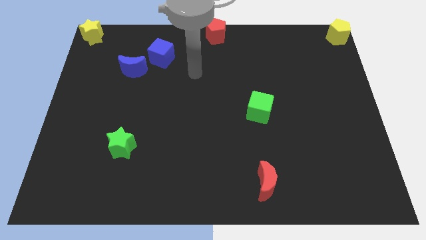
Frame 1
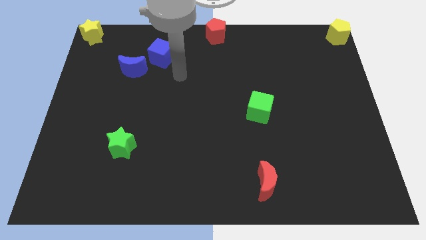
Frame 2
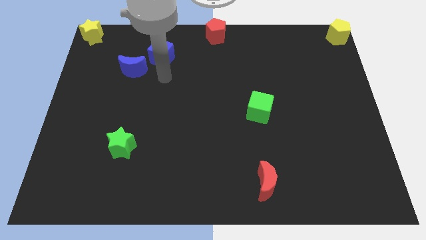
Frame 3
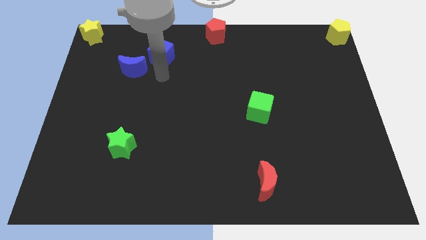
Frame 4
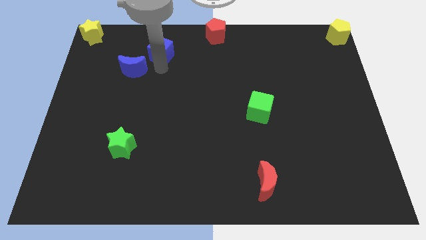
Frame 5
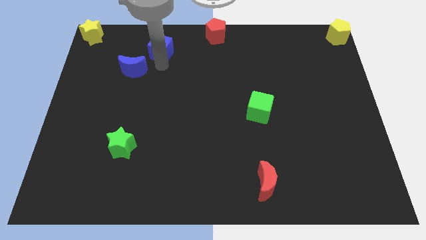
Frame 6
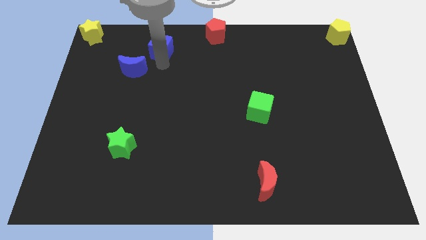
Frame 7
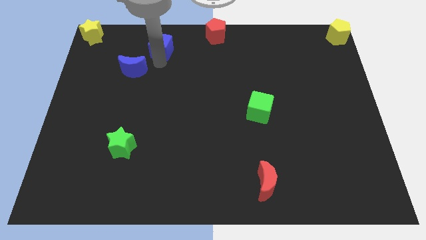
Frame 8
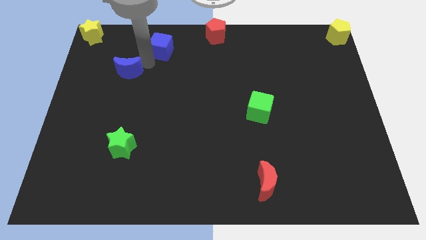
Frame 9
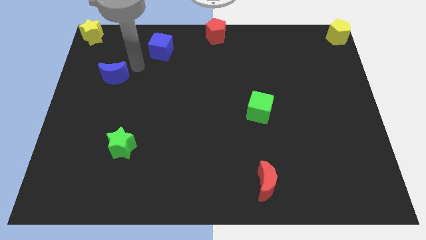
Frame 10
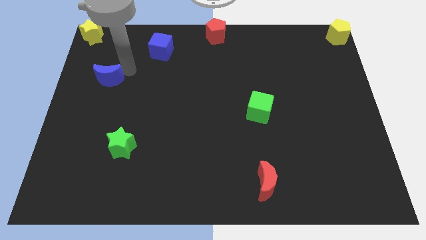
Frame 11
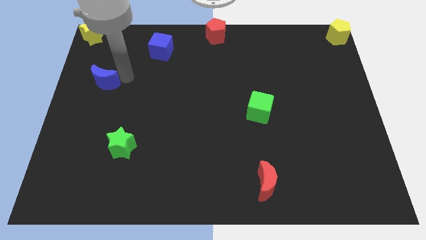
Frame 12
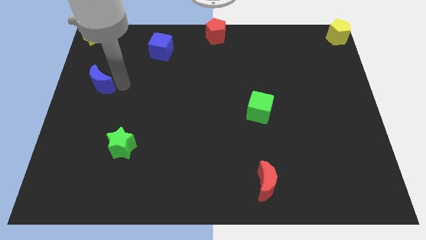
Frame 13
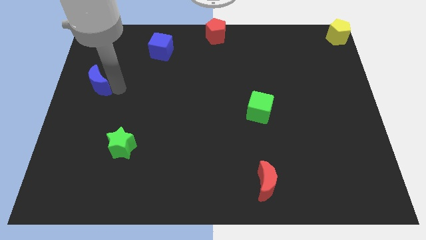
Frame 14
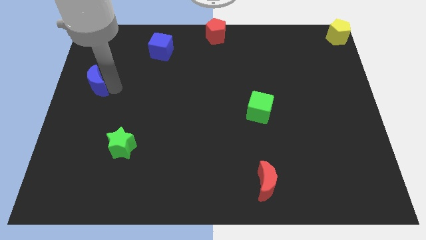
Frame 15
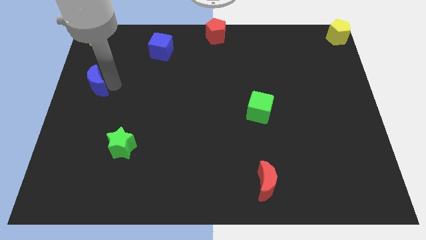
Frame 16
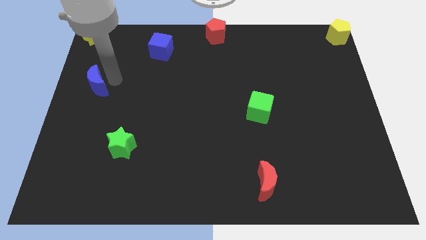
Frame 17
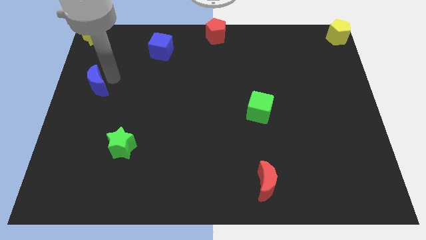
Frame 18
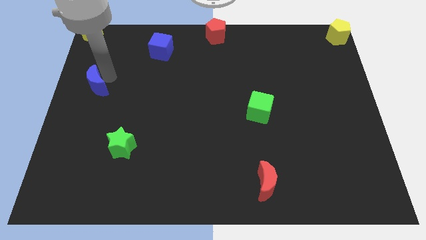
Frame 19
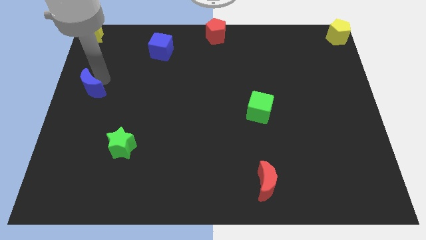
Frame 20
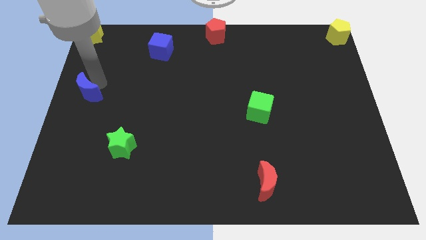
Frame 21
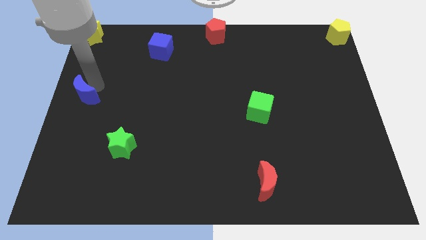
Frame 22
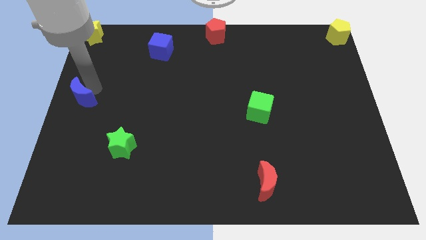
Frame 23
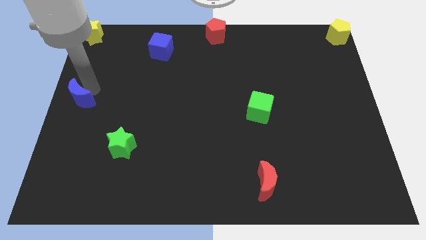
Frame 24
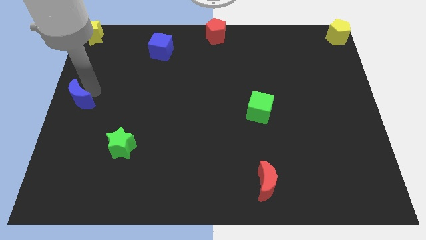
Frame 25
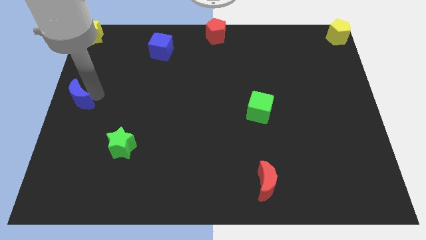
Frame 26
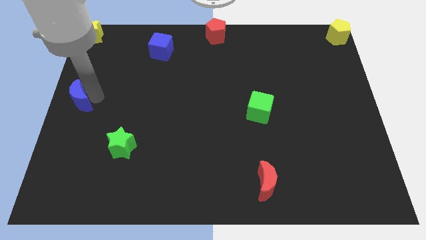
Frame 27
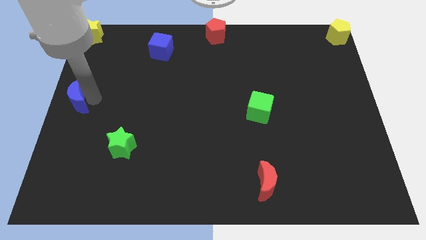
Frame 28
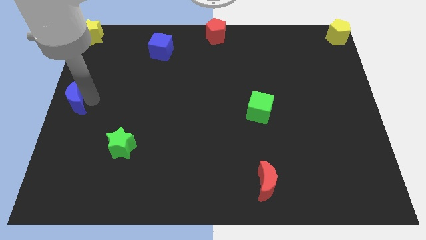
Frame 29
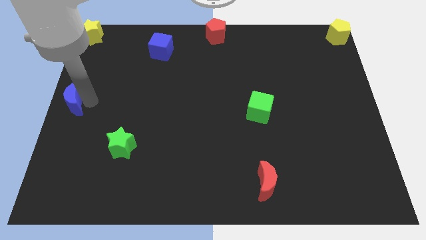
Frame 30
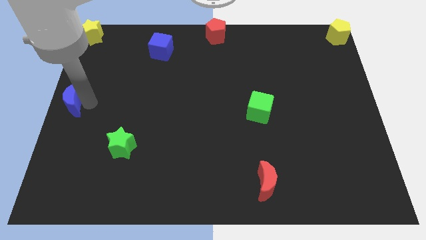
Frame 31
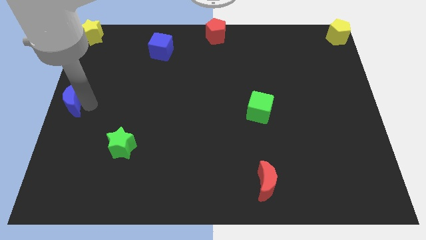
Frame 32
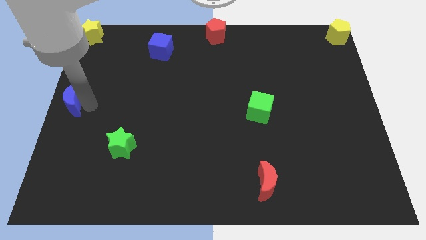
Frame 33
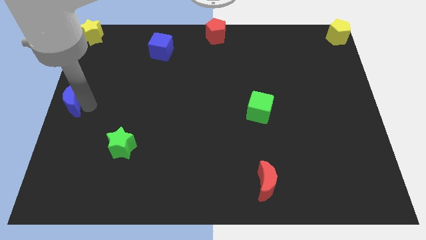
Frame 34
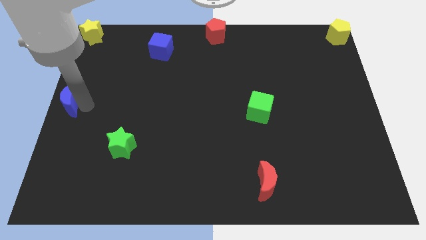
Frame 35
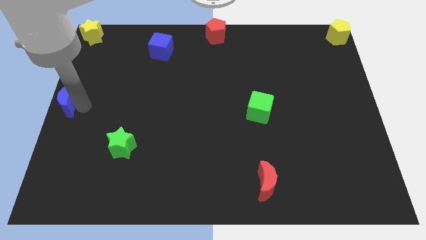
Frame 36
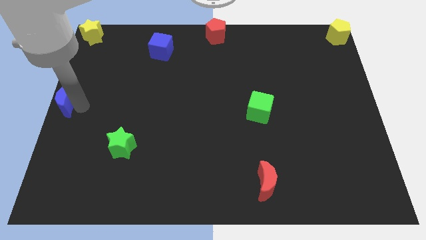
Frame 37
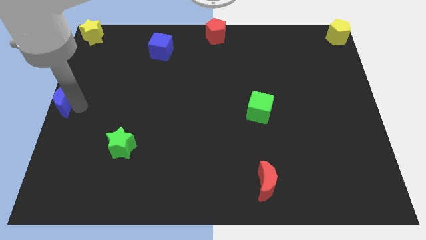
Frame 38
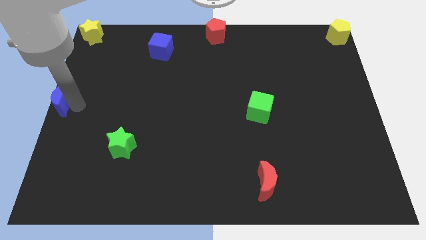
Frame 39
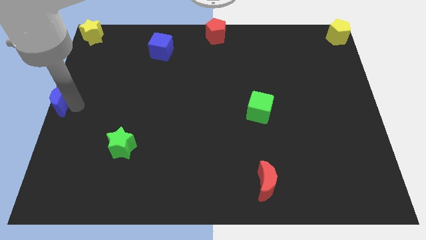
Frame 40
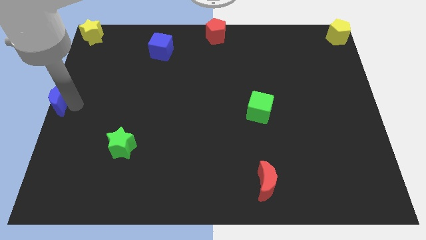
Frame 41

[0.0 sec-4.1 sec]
move the blue moon to the center left

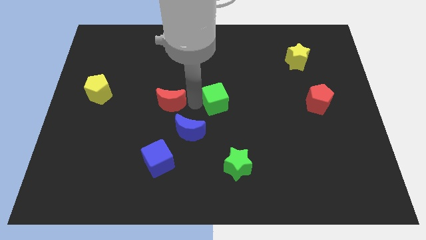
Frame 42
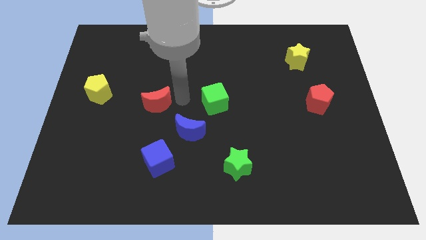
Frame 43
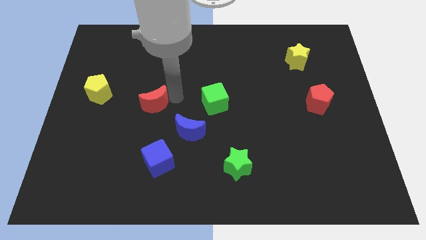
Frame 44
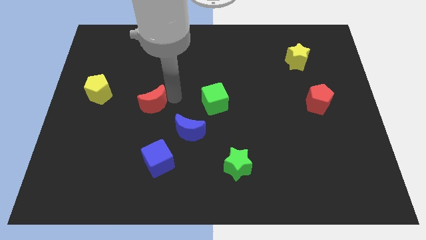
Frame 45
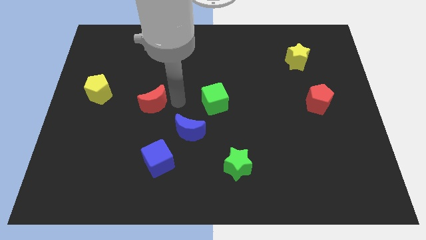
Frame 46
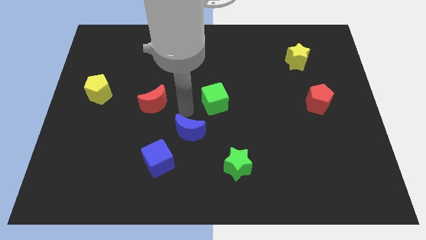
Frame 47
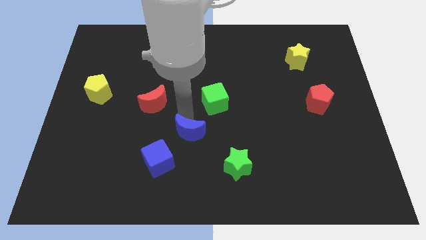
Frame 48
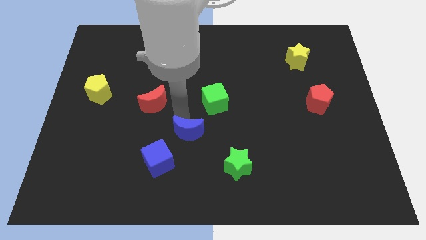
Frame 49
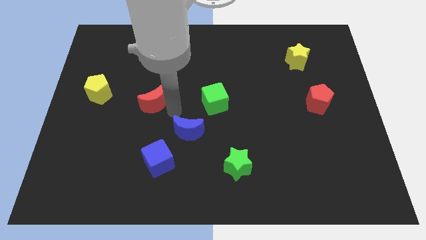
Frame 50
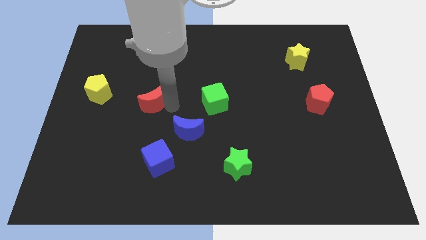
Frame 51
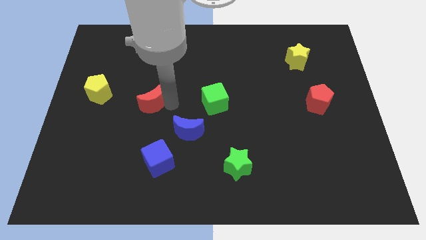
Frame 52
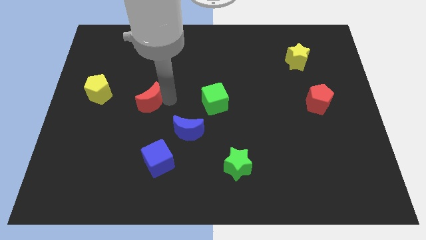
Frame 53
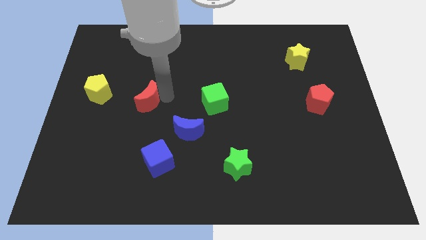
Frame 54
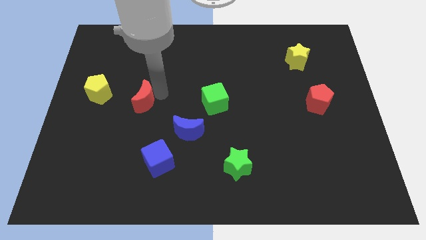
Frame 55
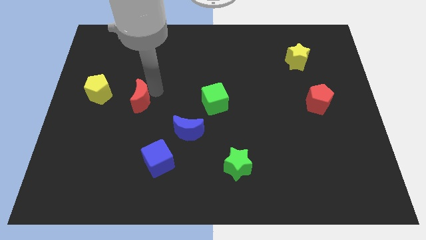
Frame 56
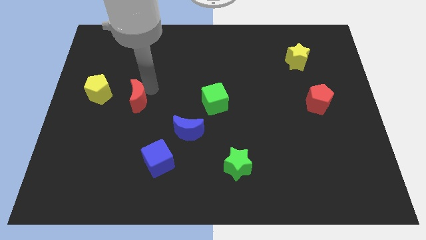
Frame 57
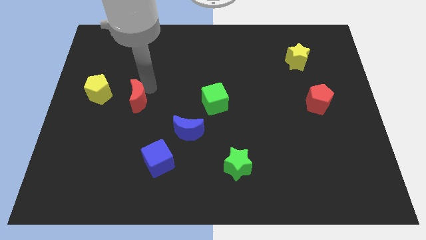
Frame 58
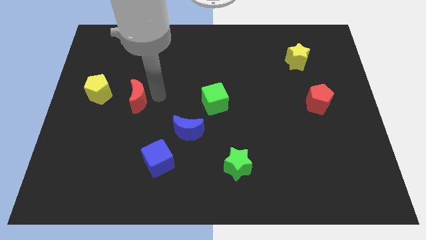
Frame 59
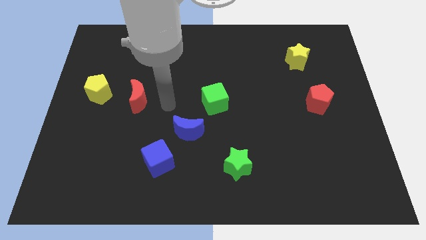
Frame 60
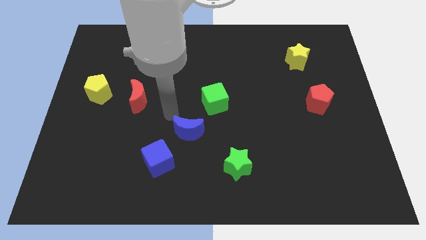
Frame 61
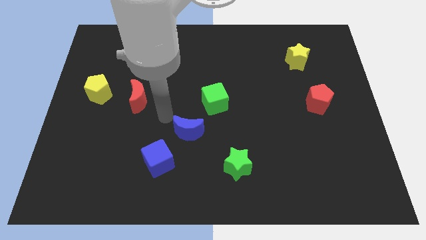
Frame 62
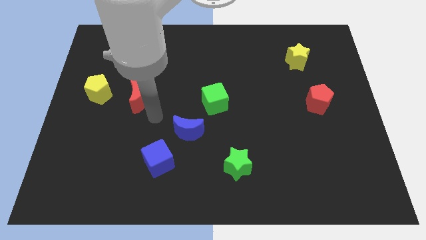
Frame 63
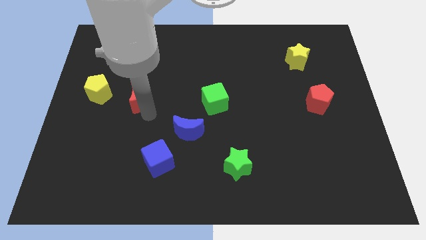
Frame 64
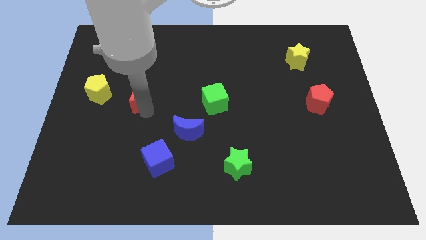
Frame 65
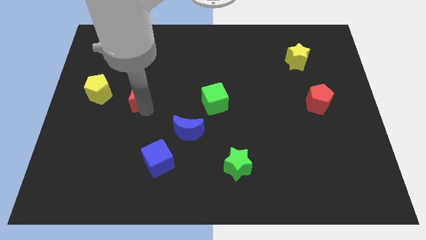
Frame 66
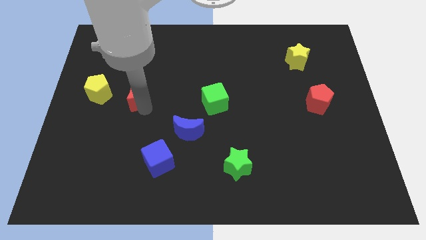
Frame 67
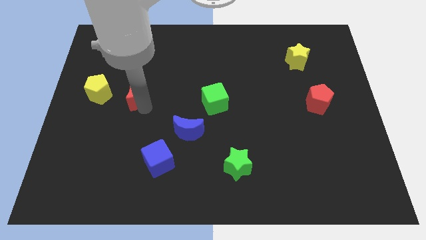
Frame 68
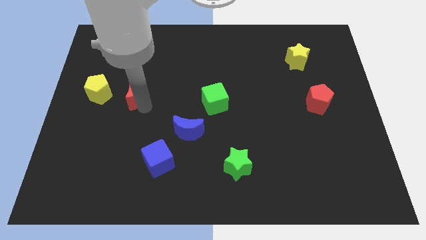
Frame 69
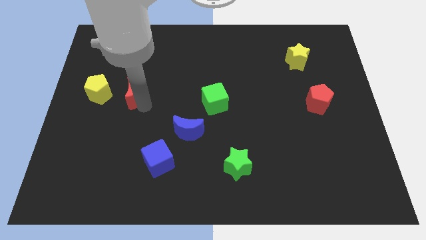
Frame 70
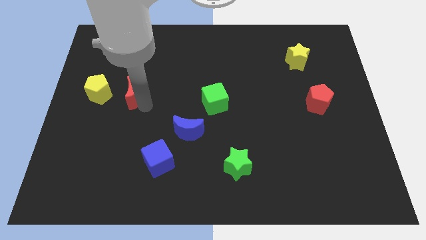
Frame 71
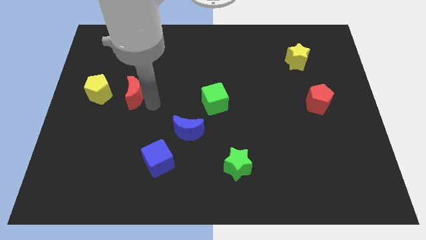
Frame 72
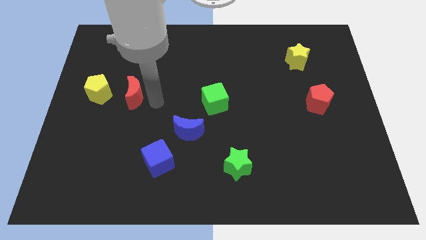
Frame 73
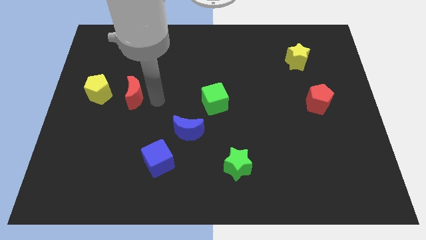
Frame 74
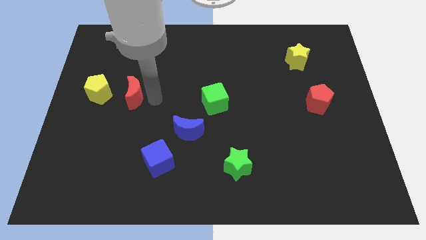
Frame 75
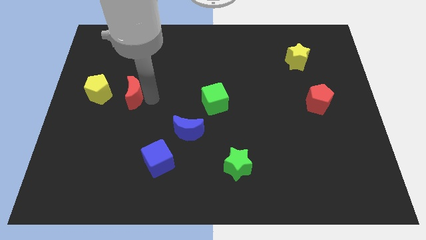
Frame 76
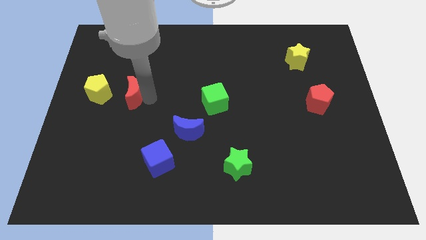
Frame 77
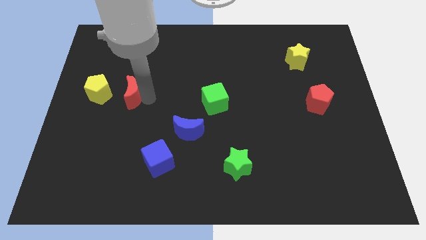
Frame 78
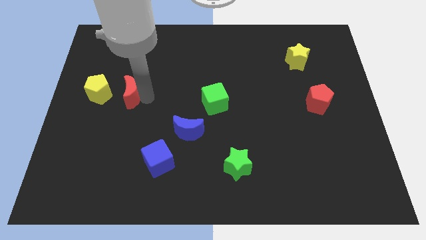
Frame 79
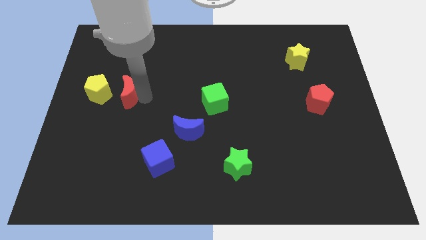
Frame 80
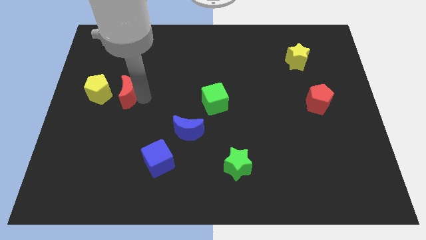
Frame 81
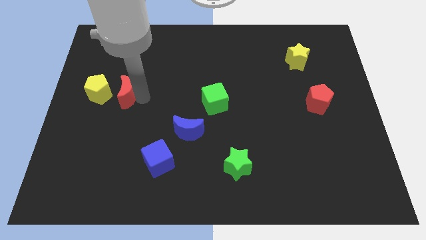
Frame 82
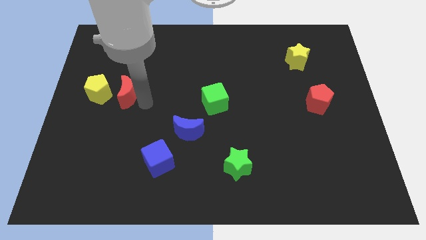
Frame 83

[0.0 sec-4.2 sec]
move the red moon to the right of yellow pentagon

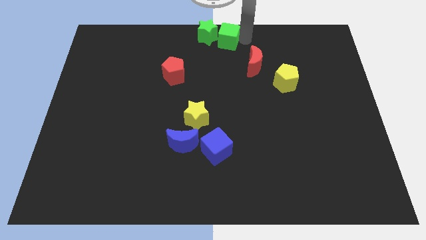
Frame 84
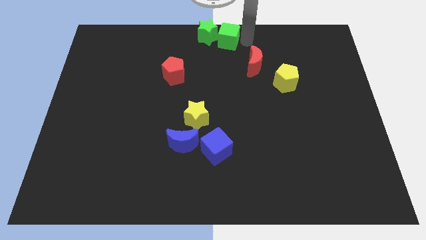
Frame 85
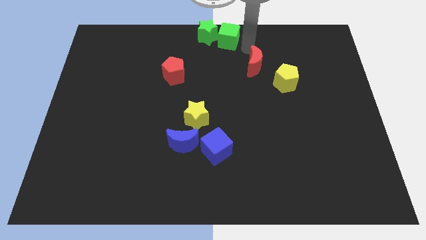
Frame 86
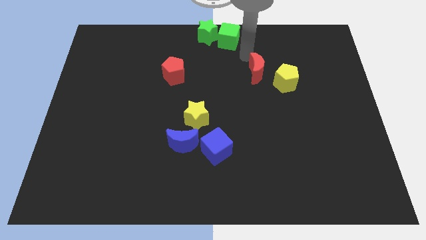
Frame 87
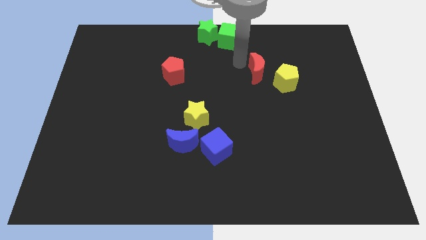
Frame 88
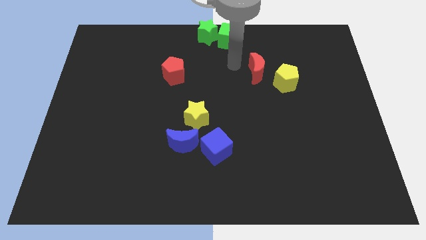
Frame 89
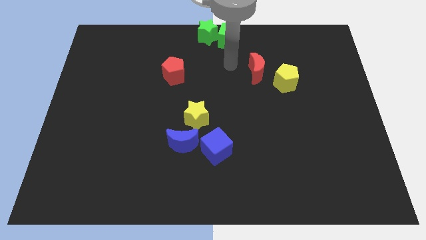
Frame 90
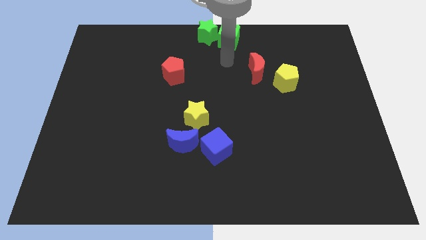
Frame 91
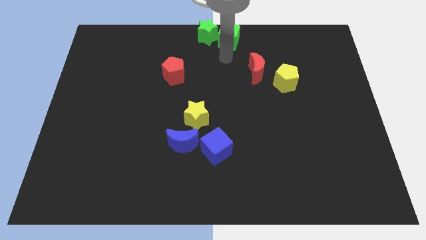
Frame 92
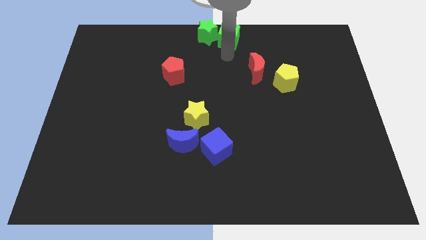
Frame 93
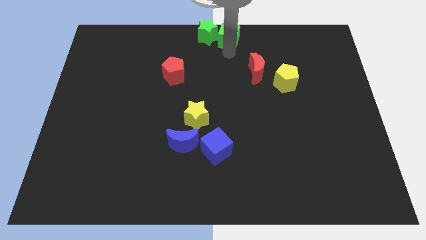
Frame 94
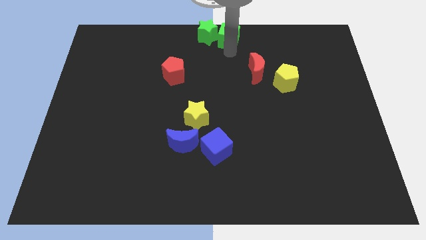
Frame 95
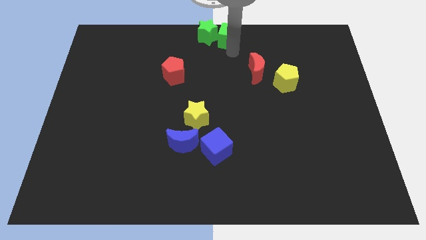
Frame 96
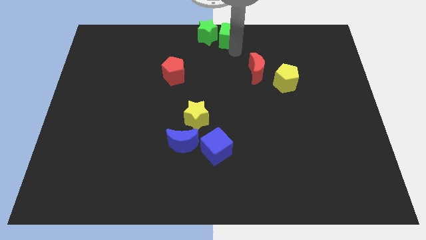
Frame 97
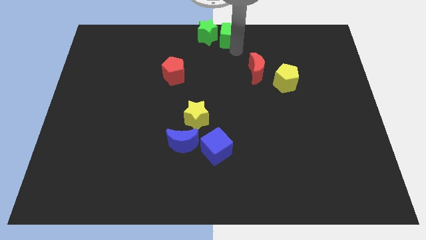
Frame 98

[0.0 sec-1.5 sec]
slightly move red crescent near yellow pentagon
